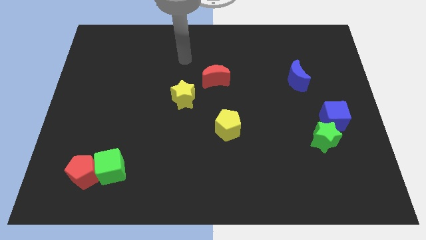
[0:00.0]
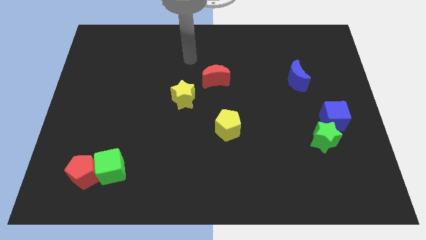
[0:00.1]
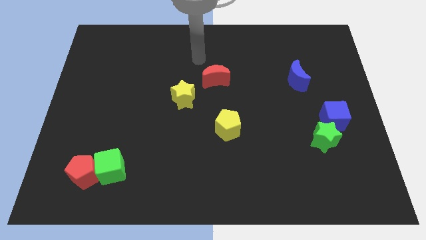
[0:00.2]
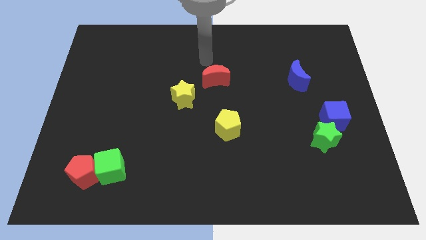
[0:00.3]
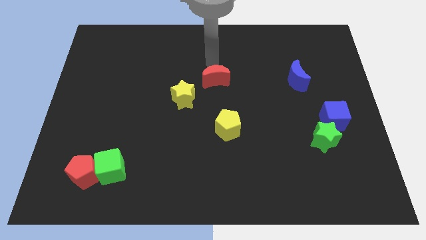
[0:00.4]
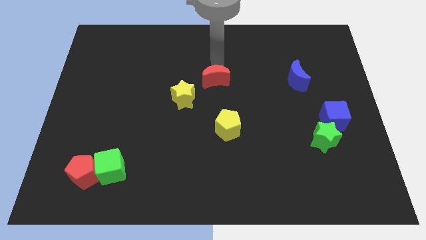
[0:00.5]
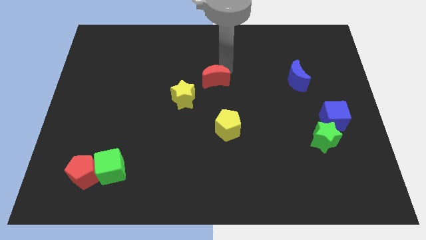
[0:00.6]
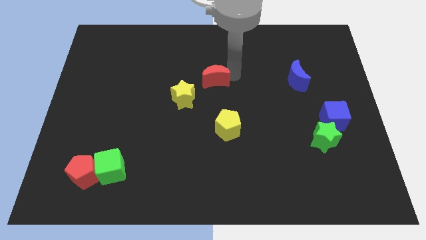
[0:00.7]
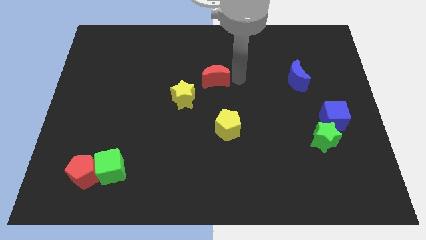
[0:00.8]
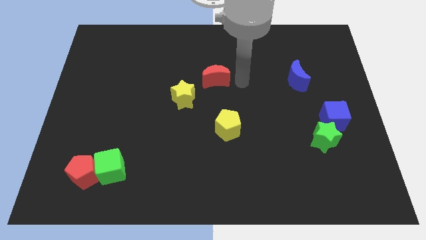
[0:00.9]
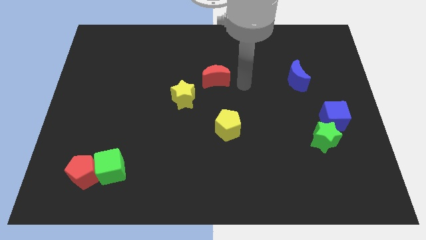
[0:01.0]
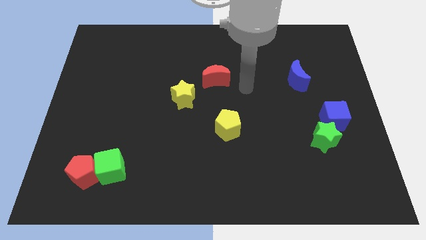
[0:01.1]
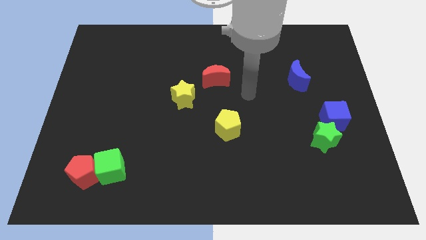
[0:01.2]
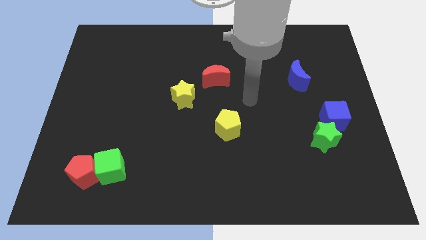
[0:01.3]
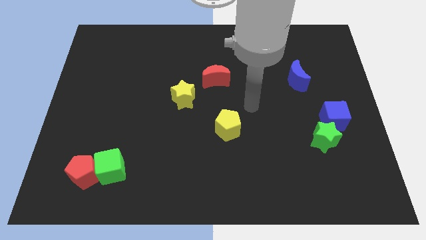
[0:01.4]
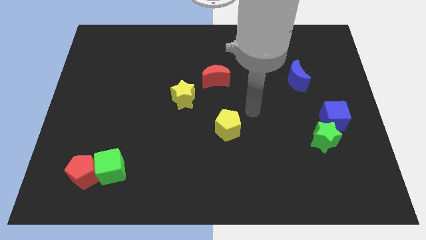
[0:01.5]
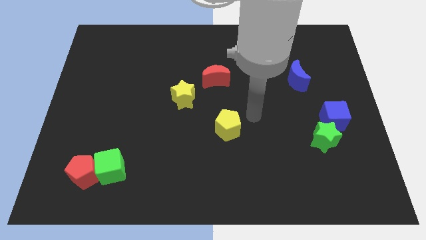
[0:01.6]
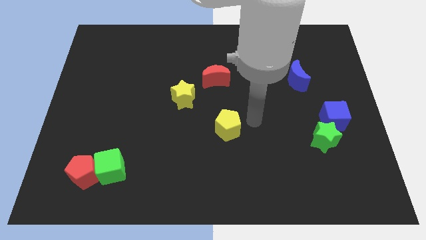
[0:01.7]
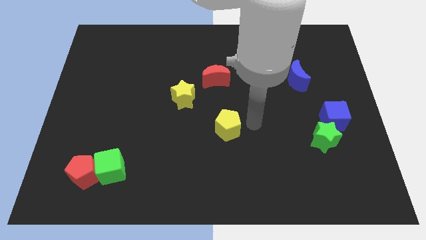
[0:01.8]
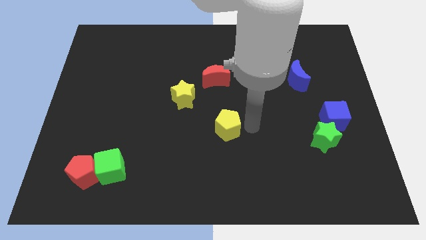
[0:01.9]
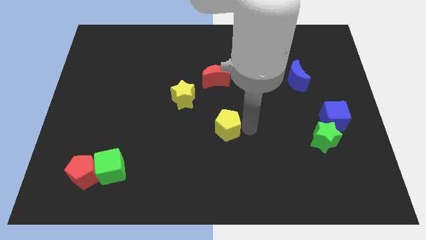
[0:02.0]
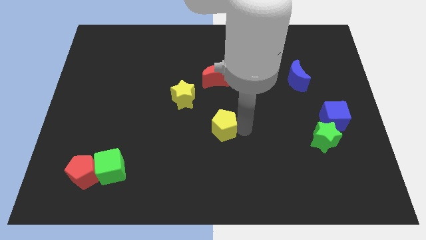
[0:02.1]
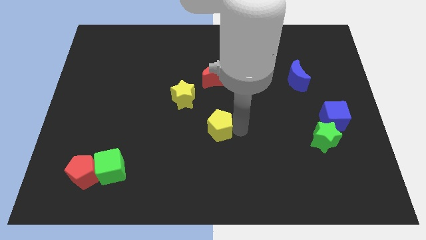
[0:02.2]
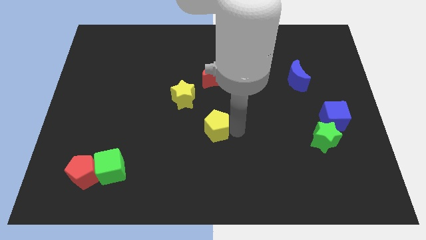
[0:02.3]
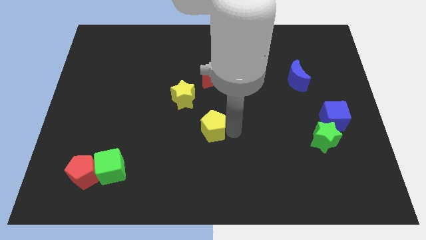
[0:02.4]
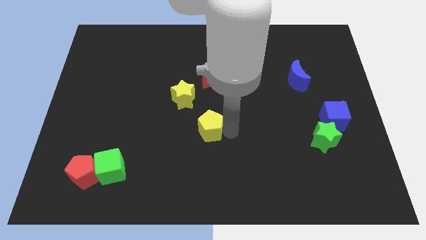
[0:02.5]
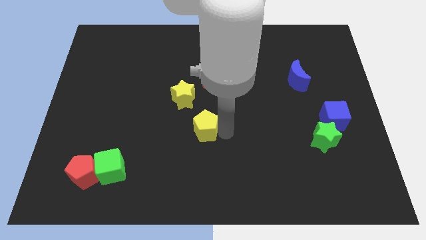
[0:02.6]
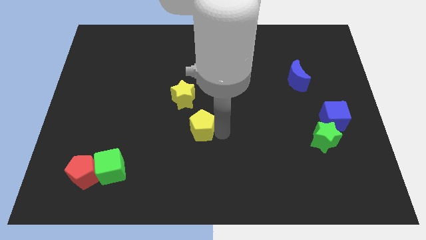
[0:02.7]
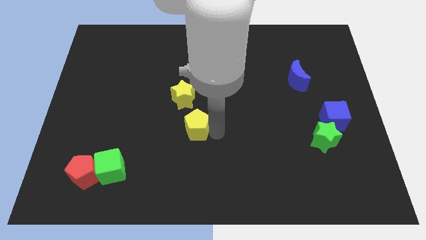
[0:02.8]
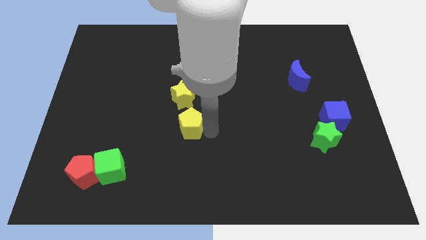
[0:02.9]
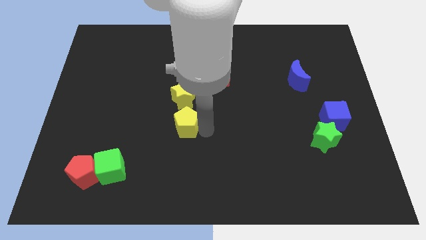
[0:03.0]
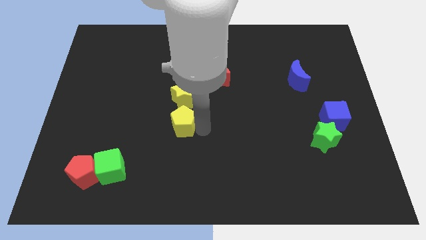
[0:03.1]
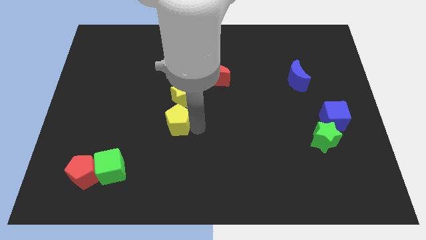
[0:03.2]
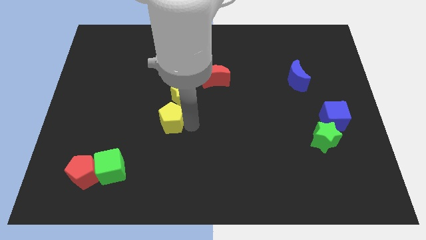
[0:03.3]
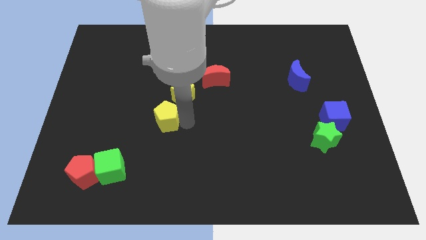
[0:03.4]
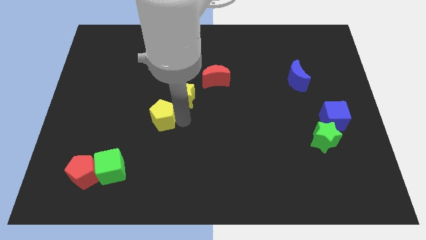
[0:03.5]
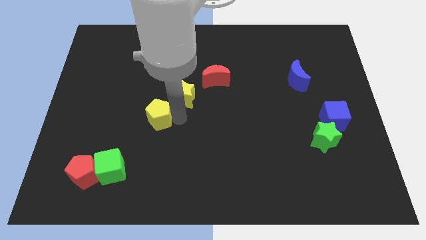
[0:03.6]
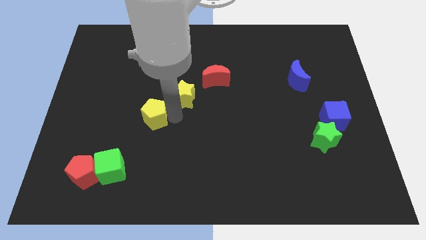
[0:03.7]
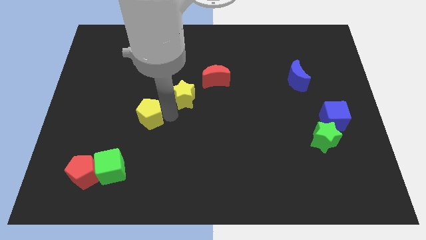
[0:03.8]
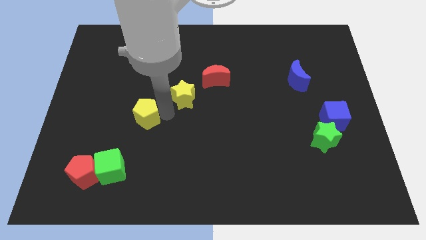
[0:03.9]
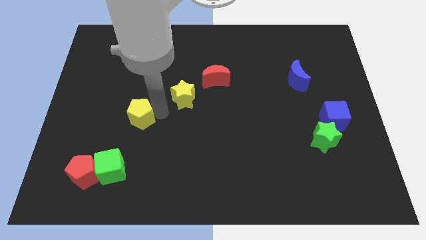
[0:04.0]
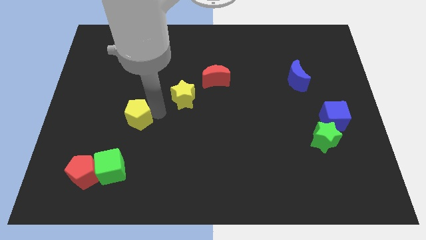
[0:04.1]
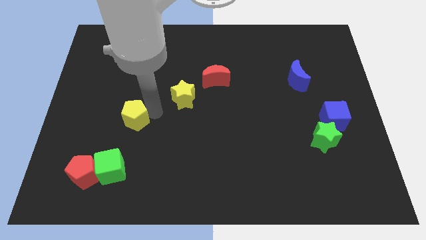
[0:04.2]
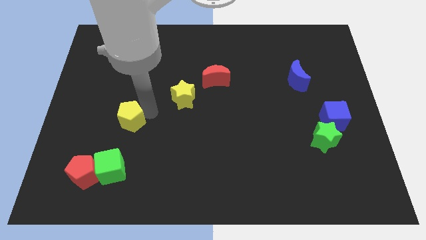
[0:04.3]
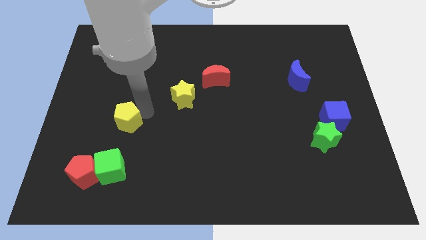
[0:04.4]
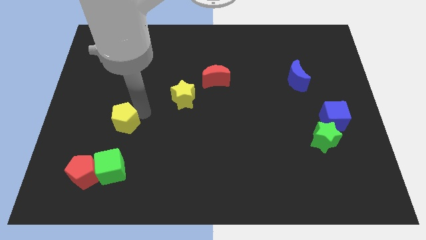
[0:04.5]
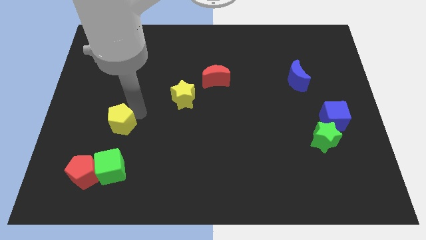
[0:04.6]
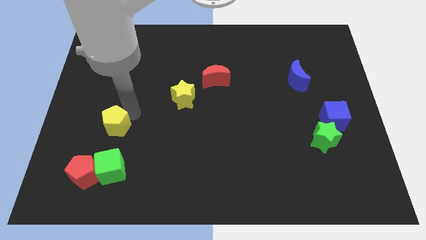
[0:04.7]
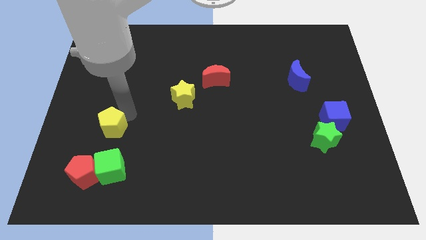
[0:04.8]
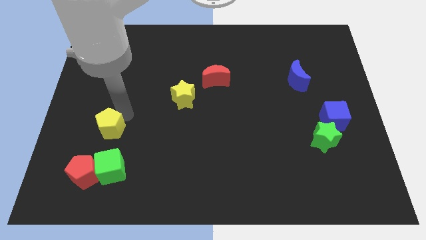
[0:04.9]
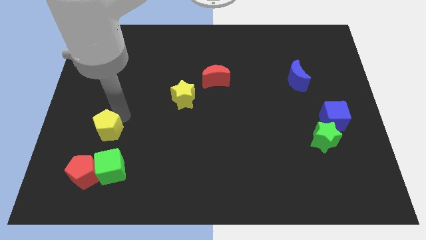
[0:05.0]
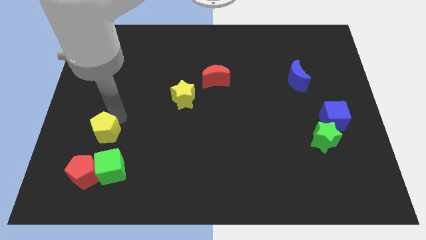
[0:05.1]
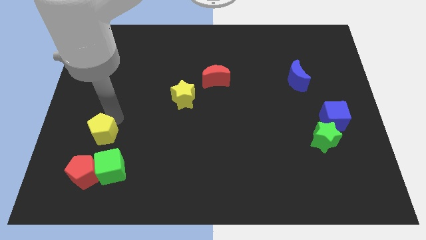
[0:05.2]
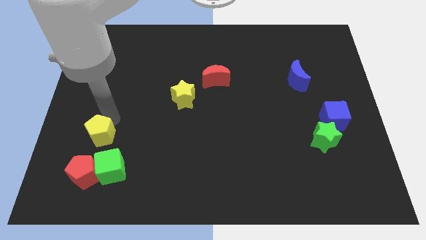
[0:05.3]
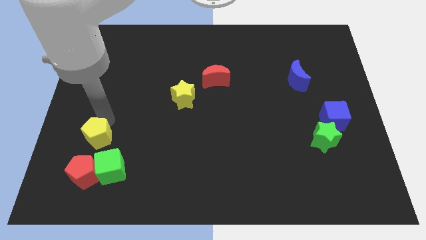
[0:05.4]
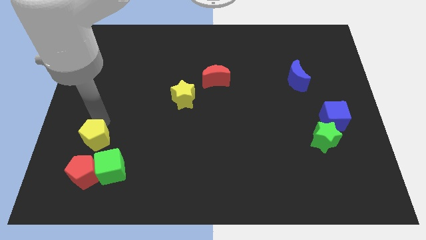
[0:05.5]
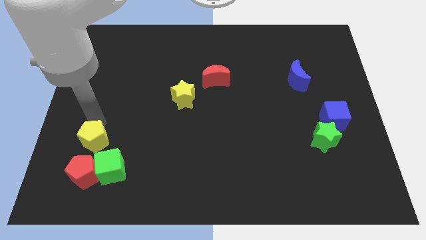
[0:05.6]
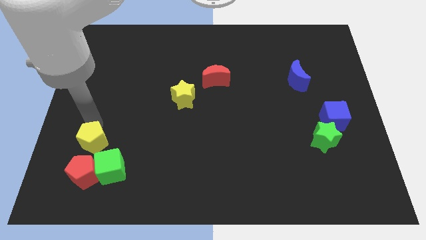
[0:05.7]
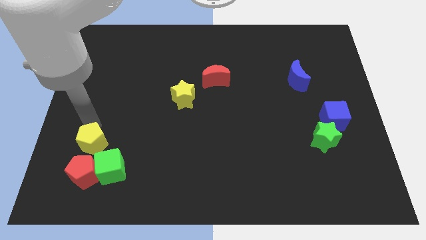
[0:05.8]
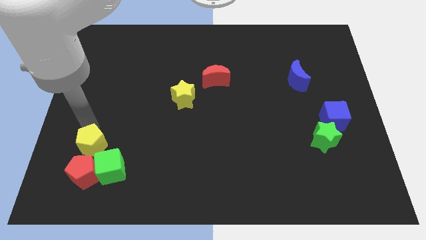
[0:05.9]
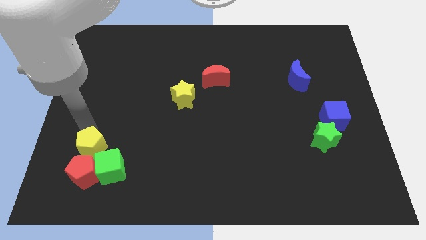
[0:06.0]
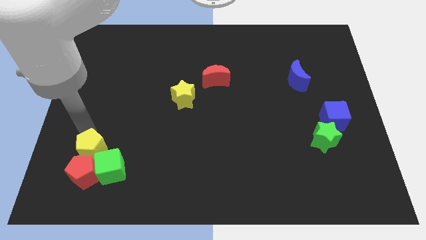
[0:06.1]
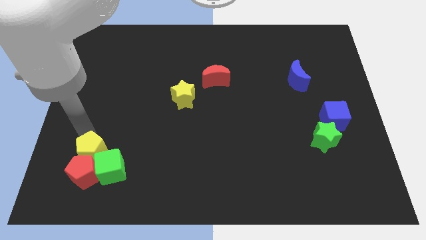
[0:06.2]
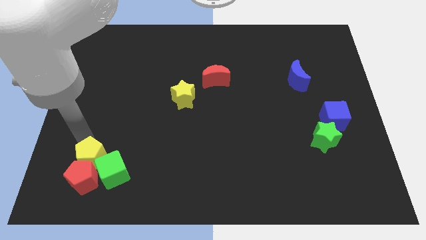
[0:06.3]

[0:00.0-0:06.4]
slide the yellow pentagon close to the red pentagon

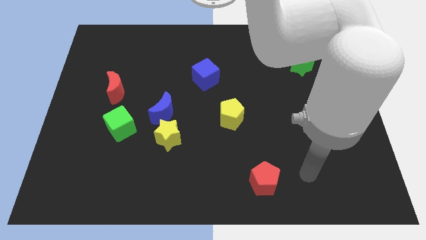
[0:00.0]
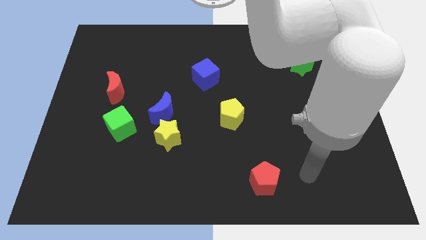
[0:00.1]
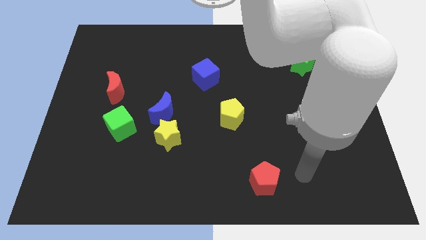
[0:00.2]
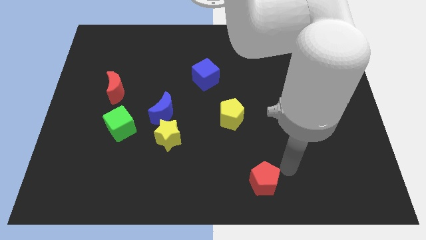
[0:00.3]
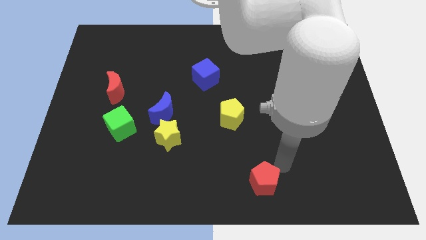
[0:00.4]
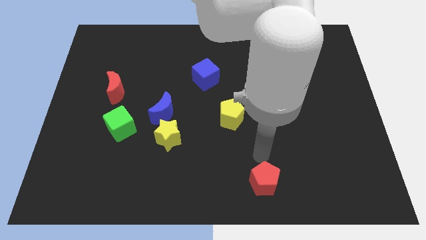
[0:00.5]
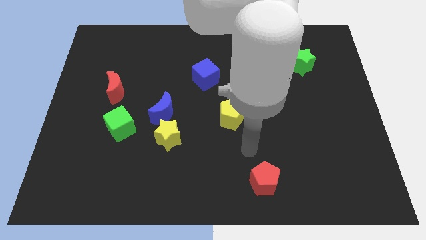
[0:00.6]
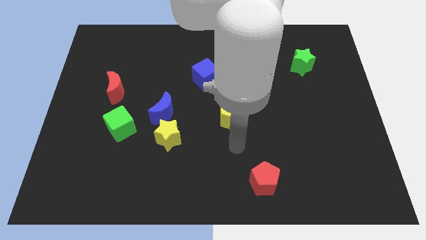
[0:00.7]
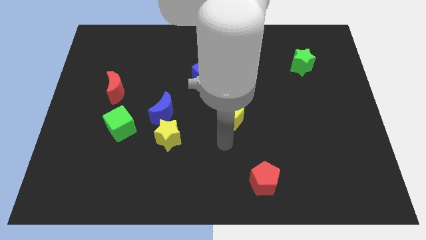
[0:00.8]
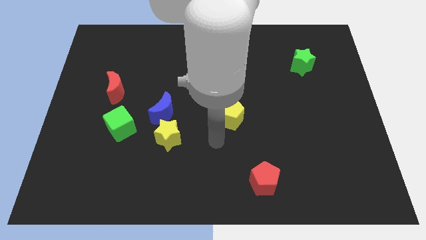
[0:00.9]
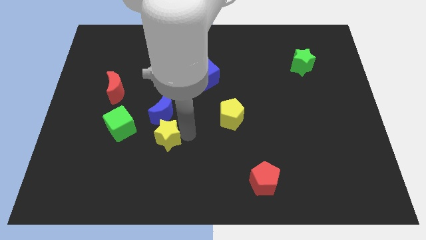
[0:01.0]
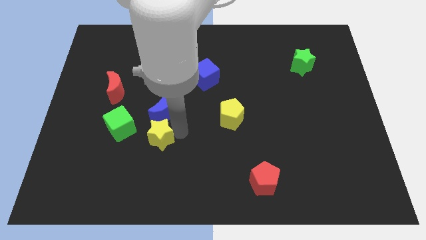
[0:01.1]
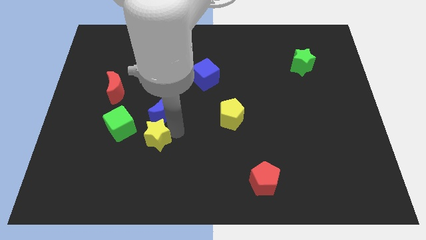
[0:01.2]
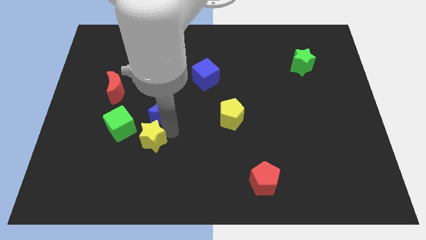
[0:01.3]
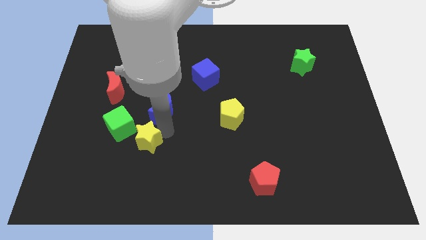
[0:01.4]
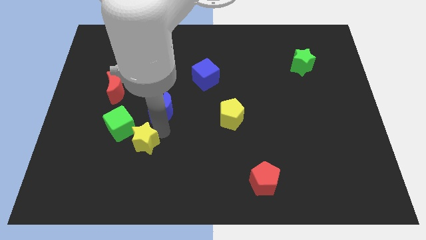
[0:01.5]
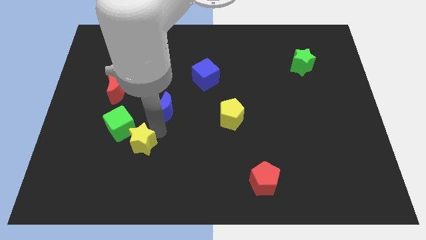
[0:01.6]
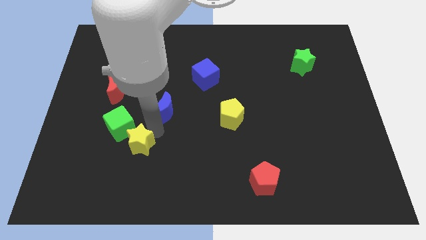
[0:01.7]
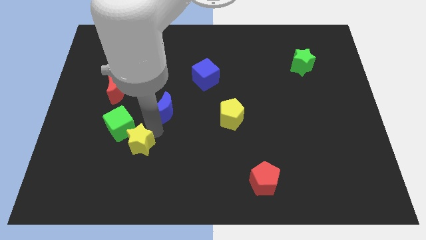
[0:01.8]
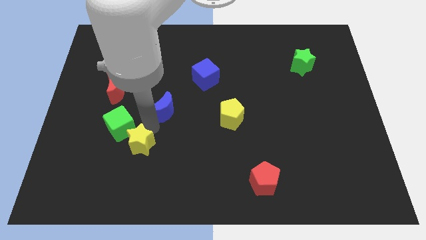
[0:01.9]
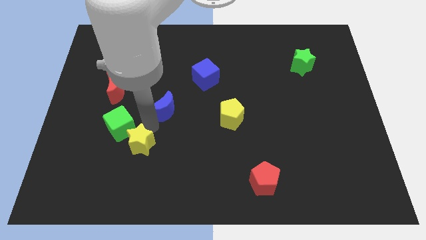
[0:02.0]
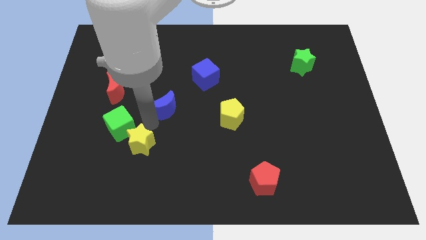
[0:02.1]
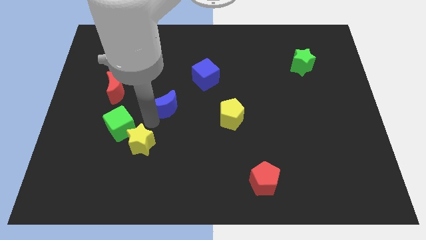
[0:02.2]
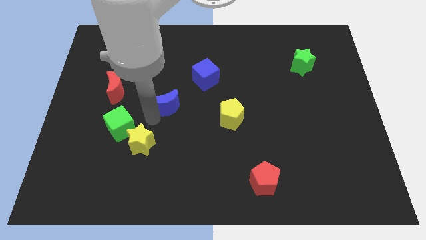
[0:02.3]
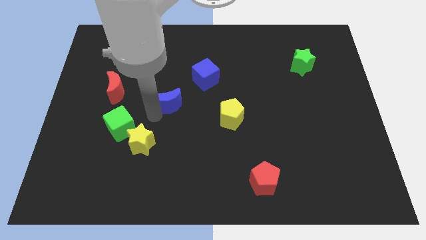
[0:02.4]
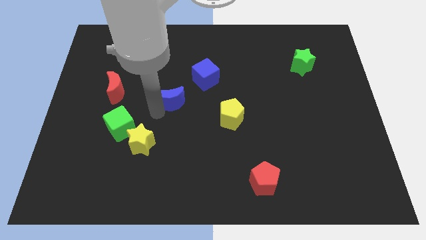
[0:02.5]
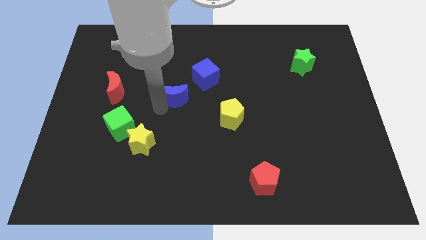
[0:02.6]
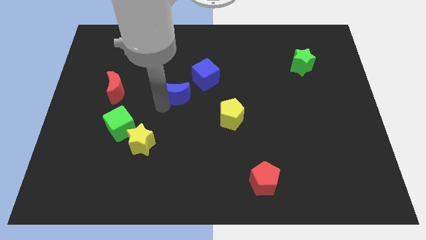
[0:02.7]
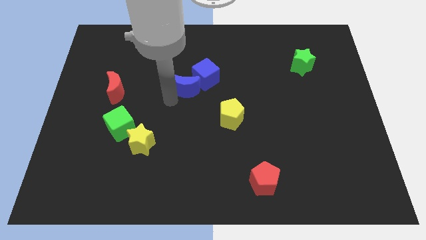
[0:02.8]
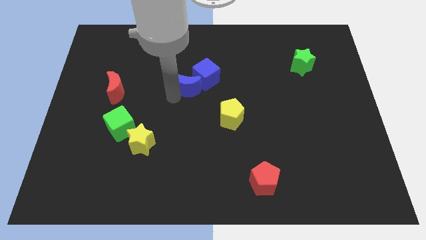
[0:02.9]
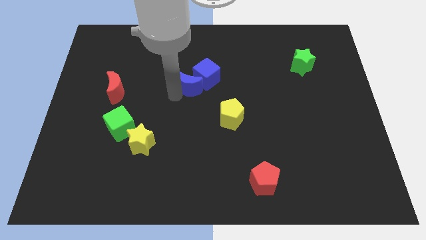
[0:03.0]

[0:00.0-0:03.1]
slide the blue moon towards the blue cube
